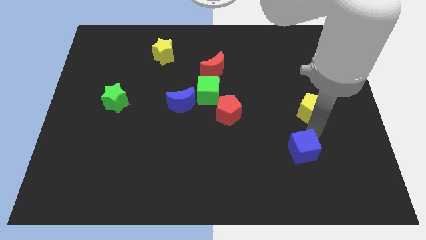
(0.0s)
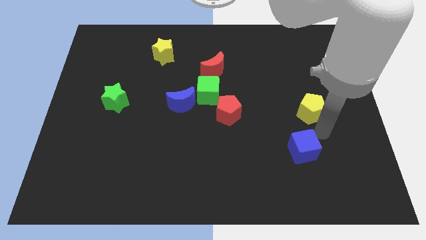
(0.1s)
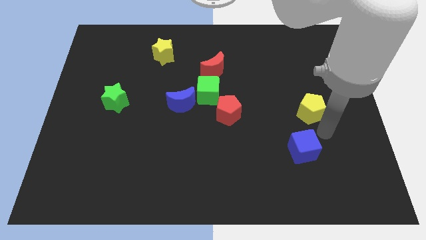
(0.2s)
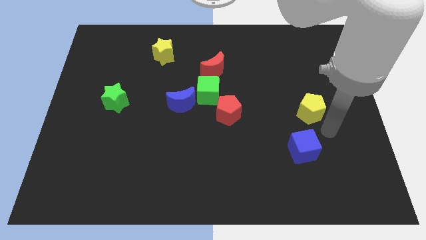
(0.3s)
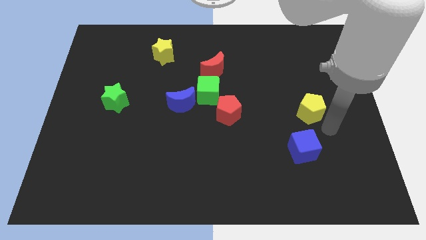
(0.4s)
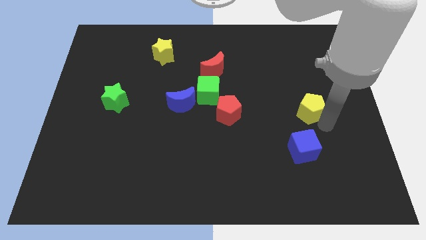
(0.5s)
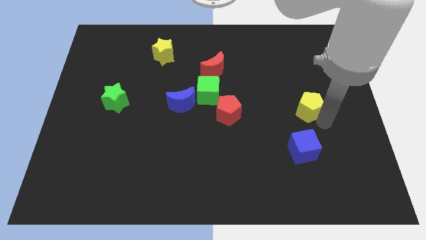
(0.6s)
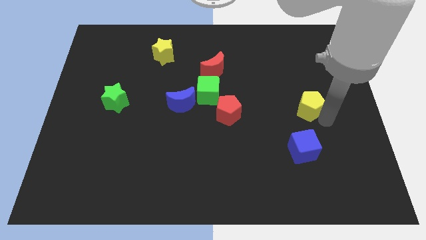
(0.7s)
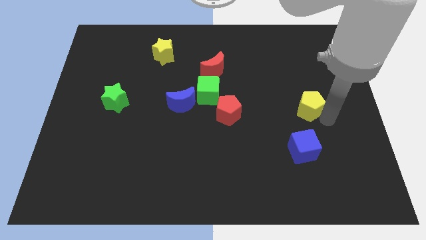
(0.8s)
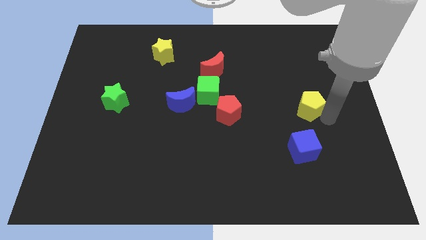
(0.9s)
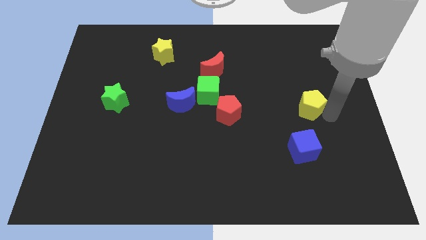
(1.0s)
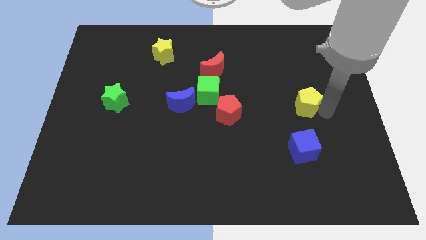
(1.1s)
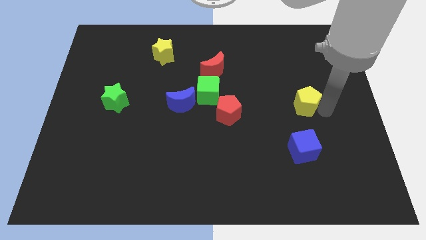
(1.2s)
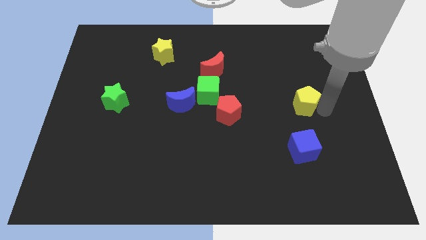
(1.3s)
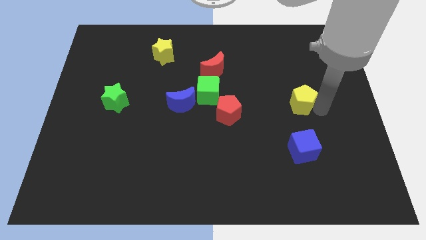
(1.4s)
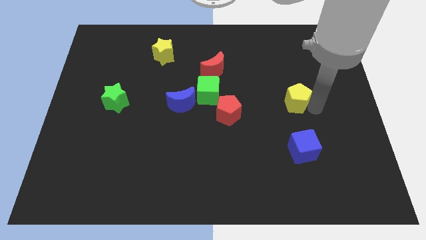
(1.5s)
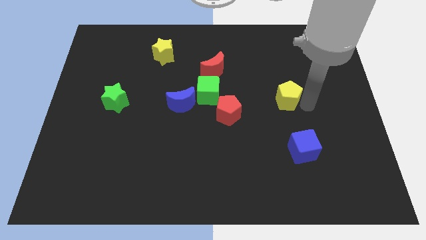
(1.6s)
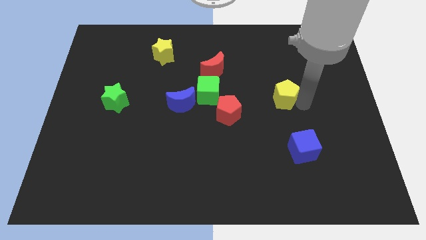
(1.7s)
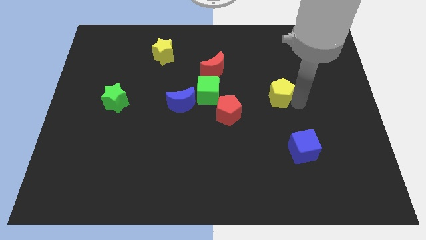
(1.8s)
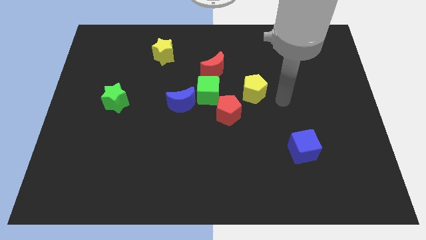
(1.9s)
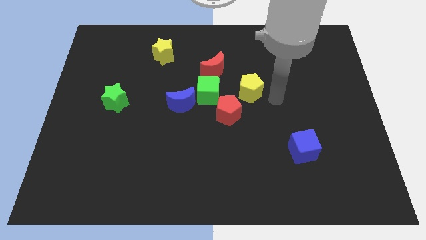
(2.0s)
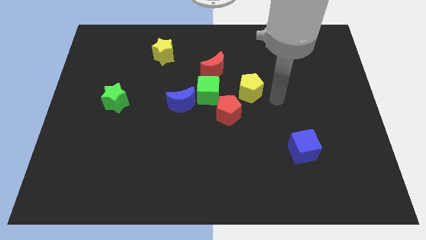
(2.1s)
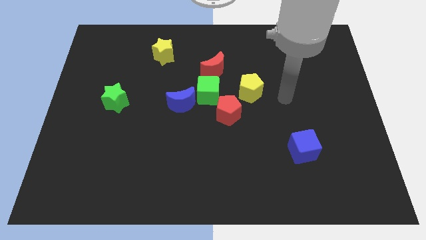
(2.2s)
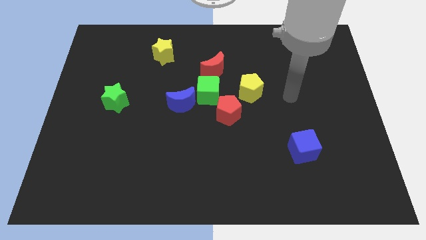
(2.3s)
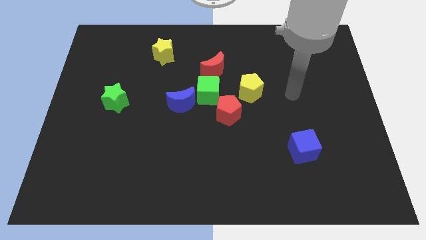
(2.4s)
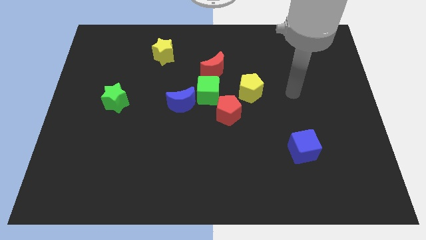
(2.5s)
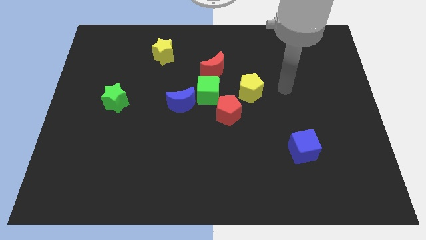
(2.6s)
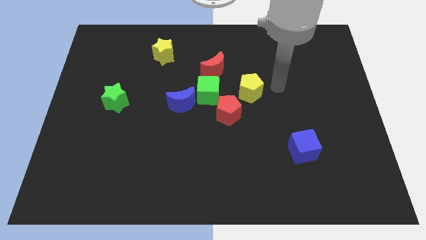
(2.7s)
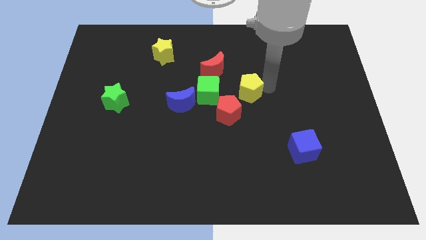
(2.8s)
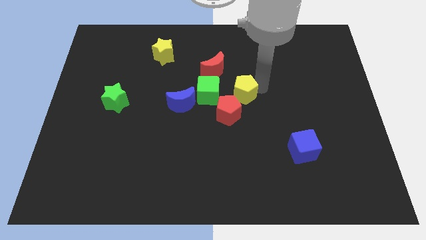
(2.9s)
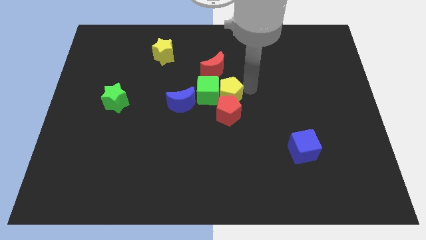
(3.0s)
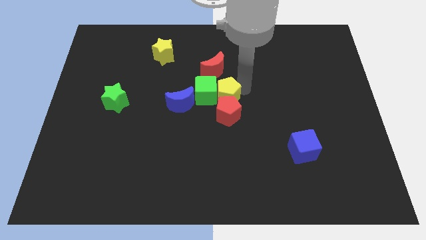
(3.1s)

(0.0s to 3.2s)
move yellow pentagon towards center of the board

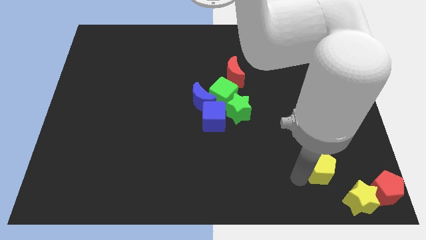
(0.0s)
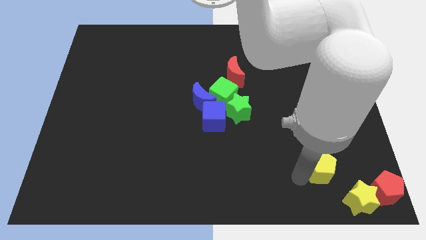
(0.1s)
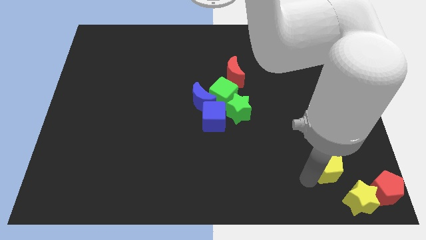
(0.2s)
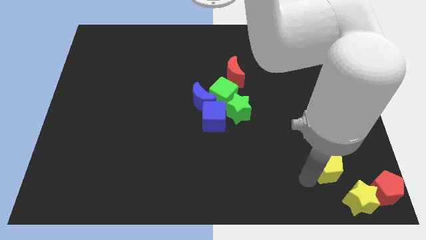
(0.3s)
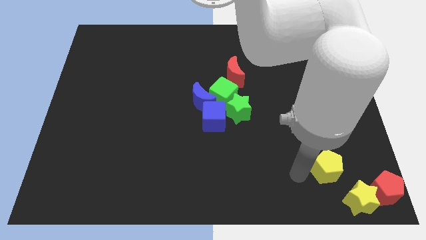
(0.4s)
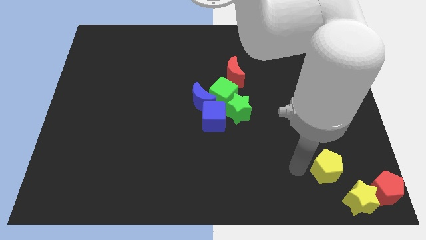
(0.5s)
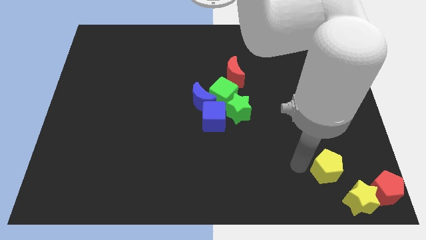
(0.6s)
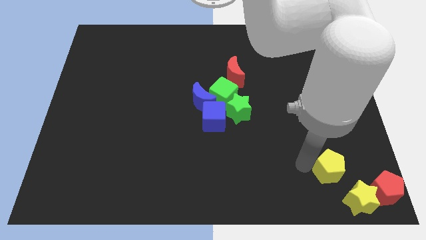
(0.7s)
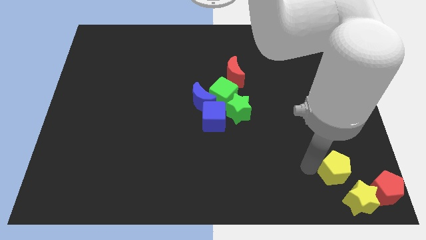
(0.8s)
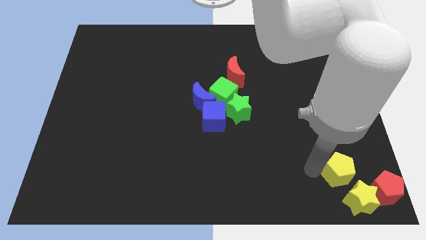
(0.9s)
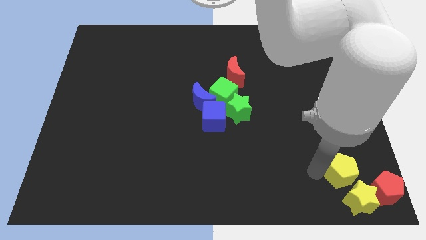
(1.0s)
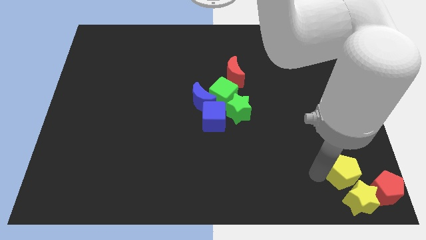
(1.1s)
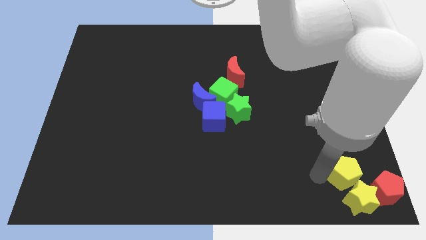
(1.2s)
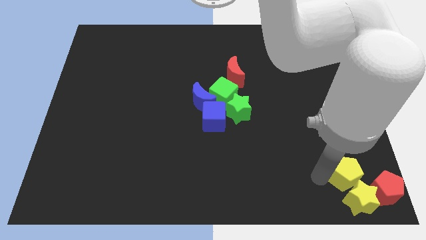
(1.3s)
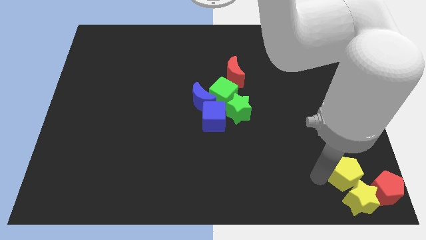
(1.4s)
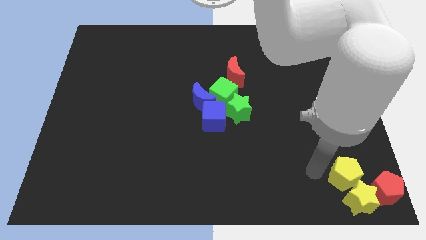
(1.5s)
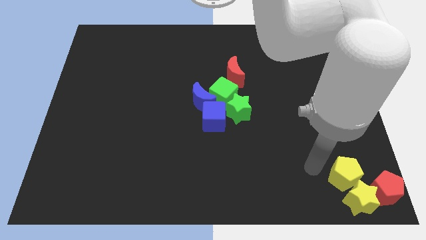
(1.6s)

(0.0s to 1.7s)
move yellow pentagon to the top left of the yellow star

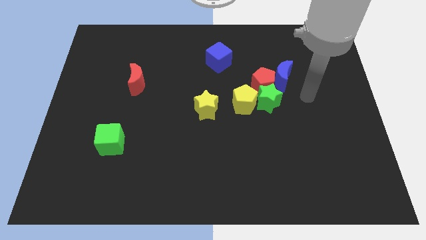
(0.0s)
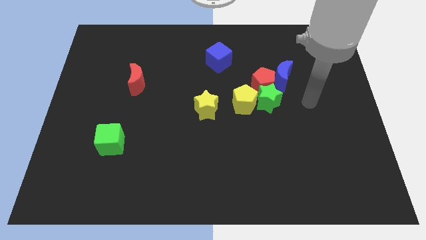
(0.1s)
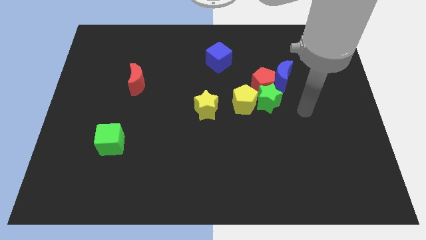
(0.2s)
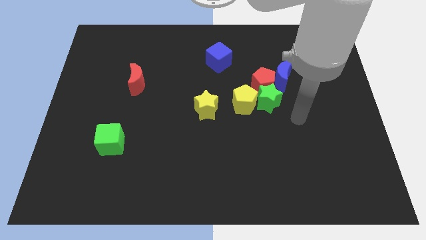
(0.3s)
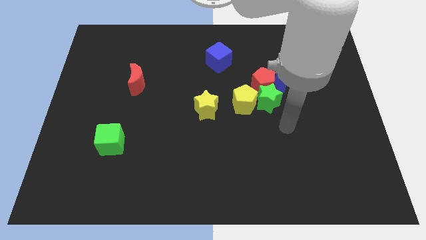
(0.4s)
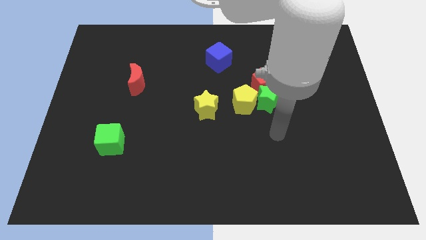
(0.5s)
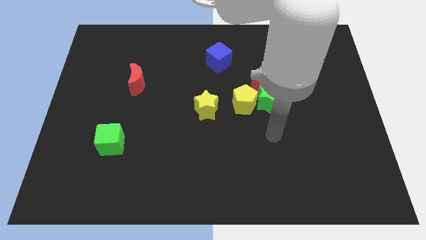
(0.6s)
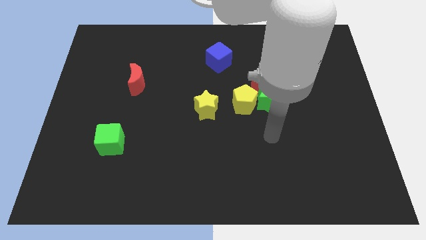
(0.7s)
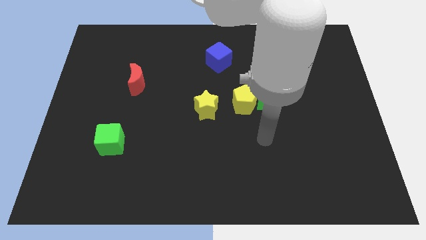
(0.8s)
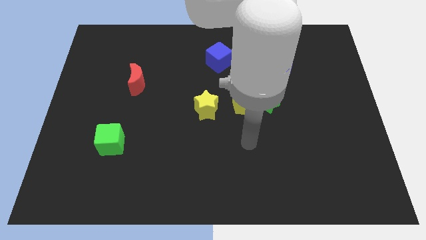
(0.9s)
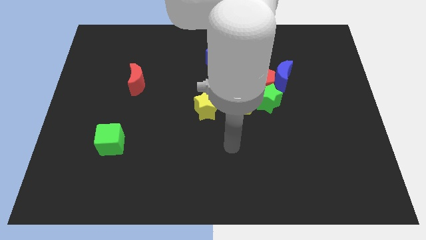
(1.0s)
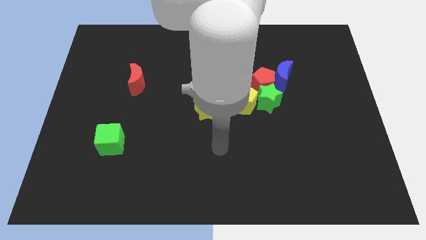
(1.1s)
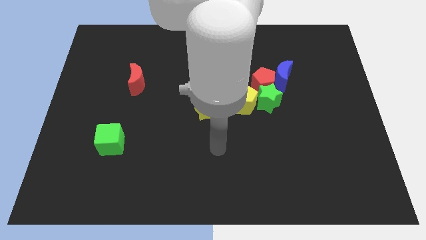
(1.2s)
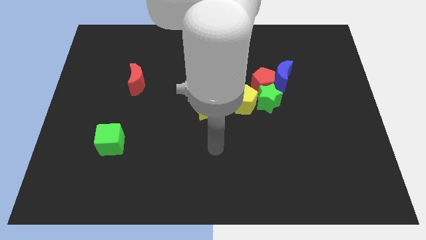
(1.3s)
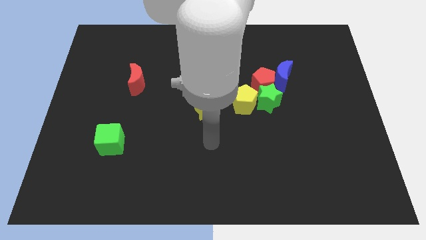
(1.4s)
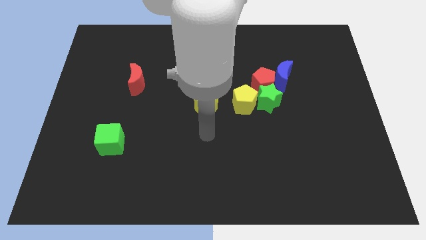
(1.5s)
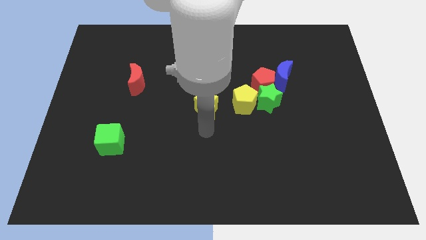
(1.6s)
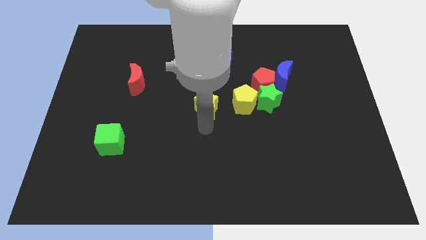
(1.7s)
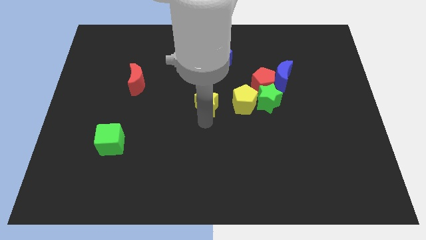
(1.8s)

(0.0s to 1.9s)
move the arm to the yellow star

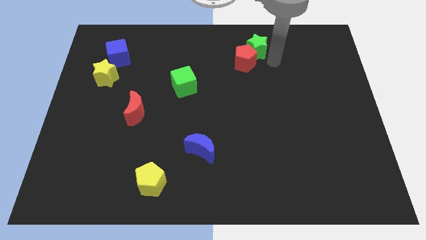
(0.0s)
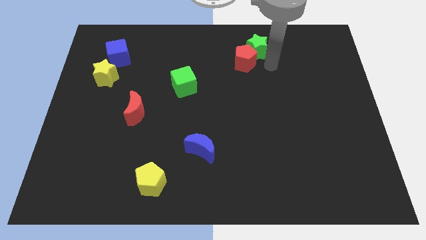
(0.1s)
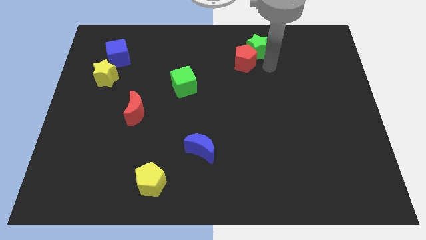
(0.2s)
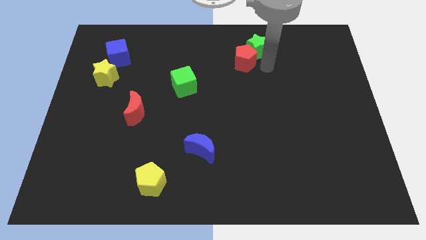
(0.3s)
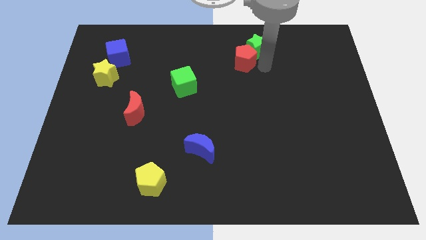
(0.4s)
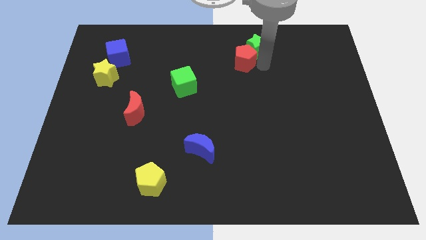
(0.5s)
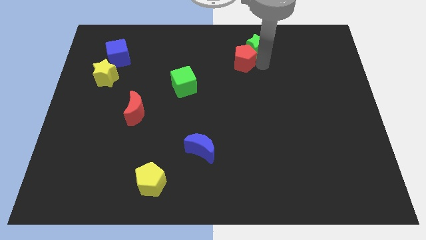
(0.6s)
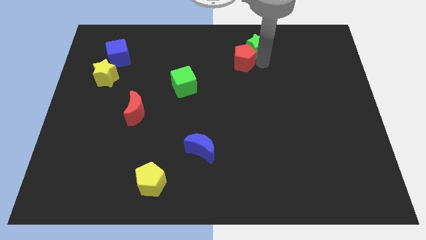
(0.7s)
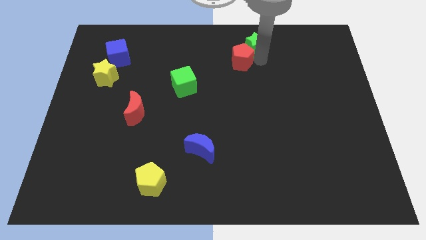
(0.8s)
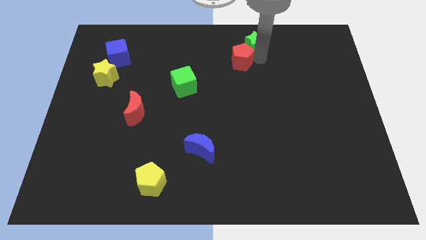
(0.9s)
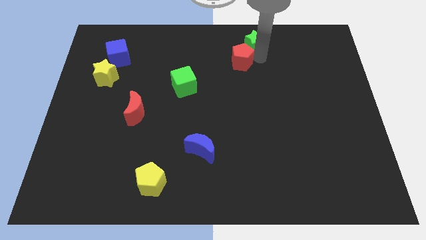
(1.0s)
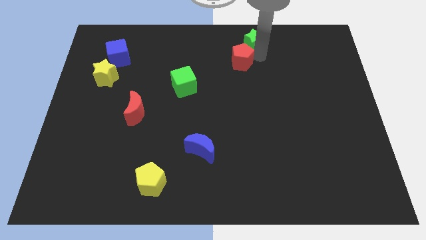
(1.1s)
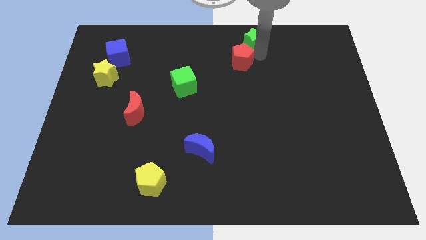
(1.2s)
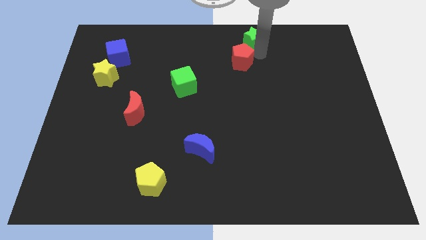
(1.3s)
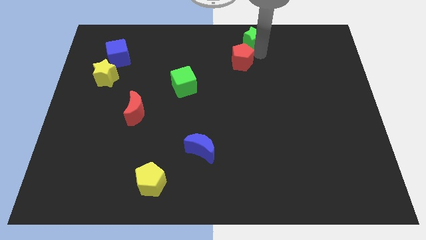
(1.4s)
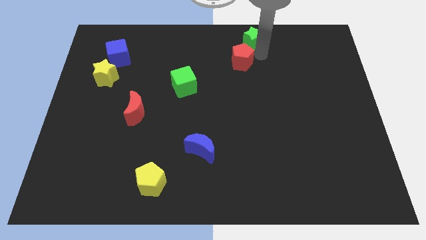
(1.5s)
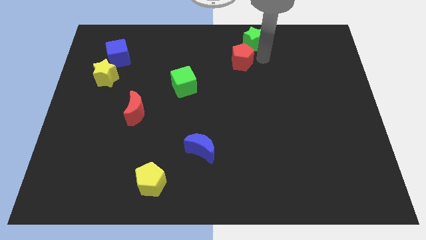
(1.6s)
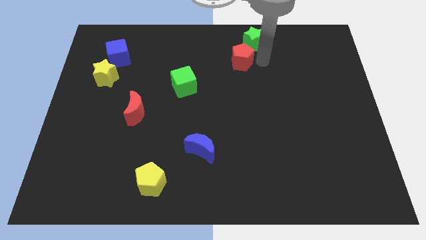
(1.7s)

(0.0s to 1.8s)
separate the green star from the red pentagon

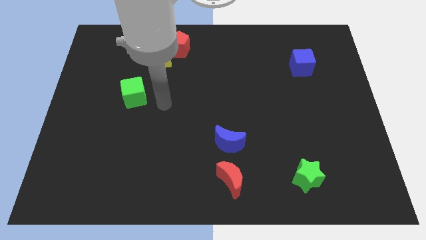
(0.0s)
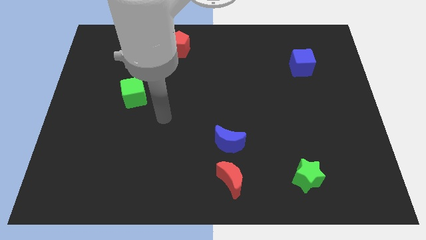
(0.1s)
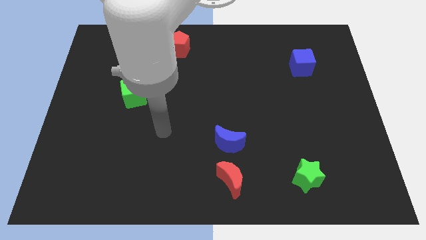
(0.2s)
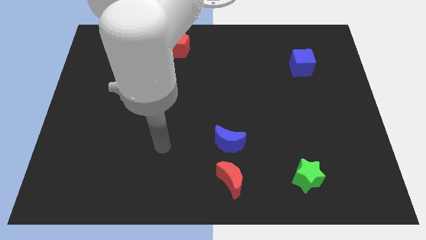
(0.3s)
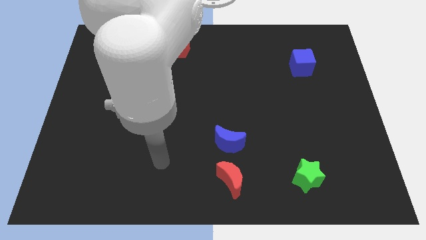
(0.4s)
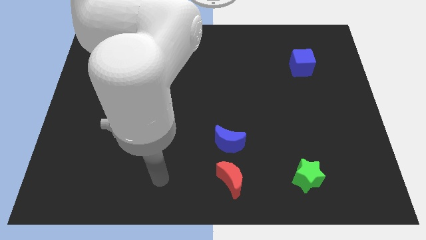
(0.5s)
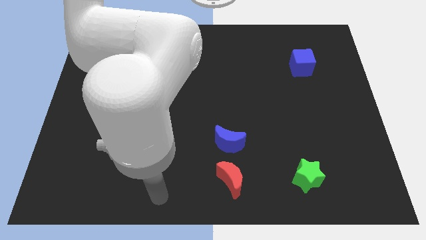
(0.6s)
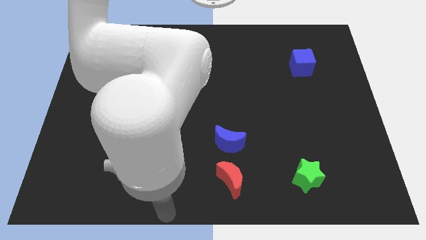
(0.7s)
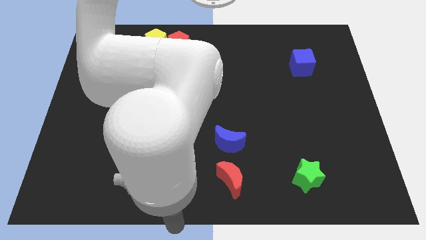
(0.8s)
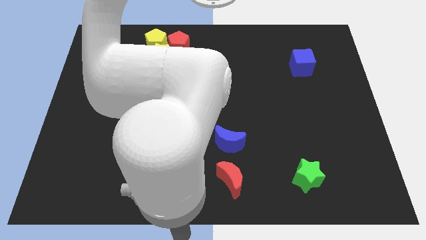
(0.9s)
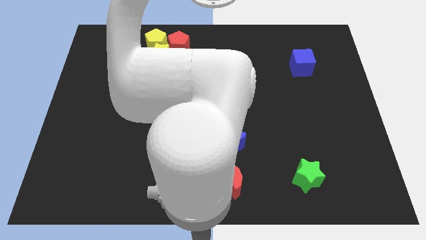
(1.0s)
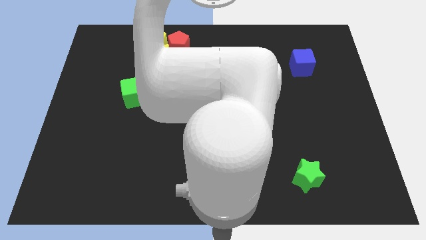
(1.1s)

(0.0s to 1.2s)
push your hand at the bottom center of the board
